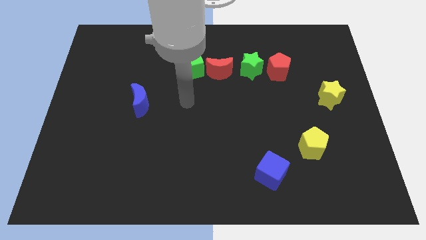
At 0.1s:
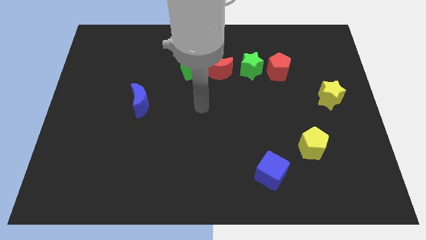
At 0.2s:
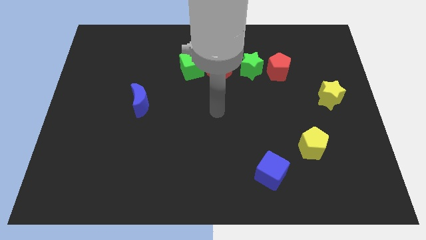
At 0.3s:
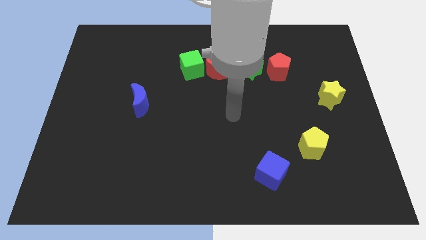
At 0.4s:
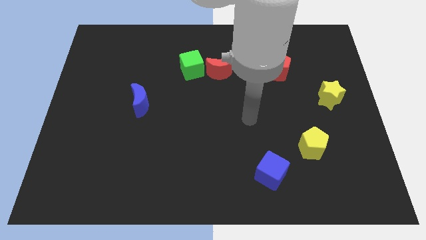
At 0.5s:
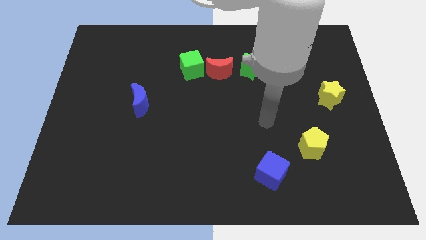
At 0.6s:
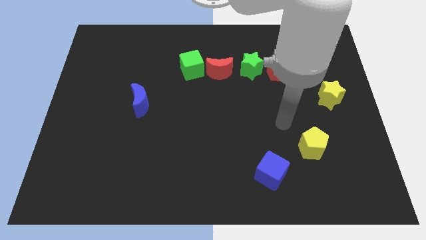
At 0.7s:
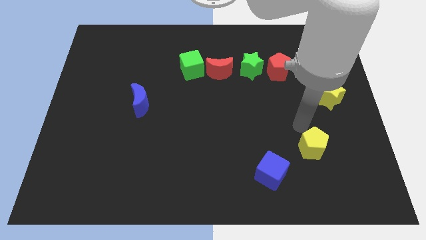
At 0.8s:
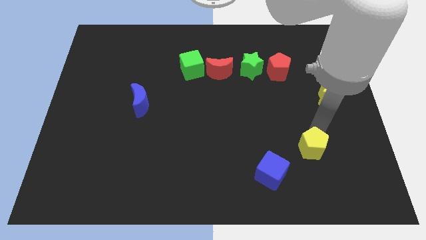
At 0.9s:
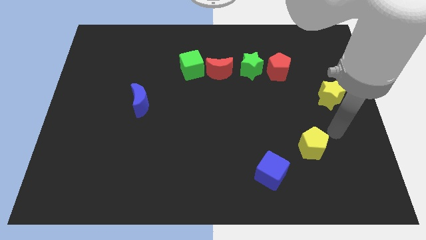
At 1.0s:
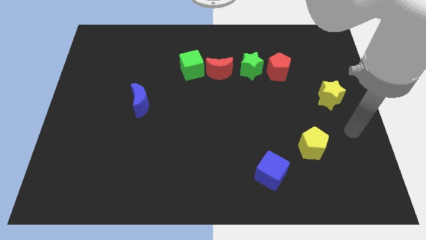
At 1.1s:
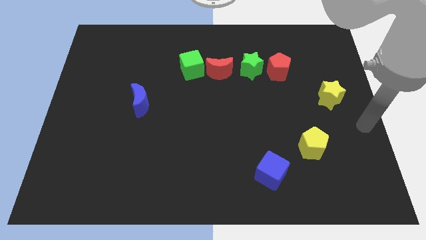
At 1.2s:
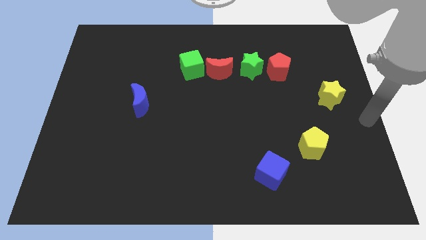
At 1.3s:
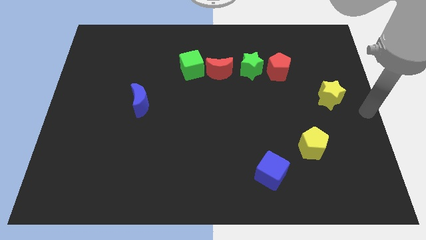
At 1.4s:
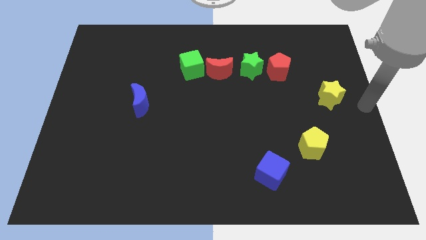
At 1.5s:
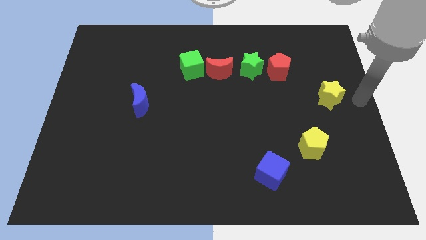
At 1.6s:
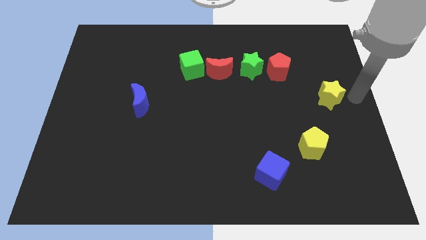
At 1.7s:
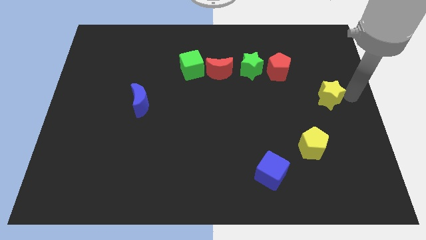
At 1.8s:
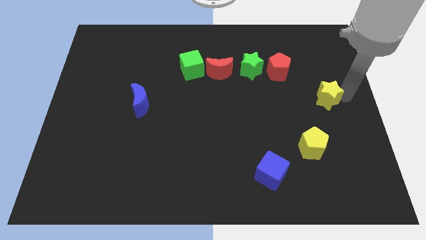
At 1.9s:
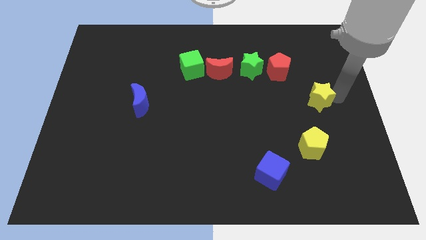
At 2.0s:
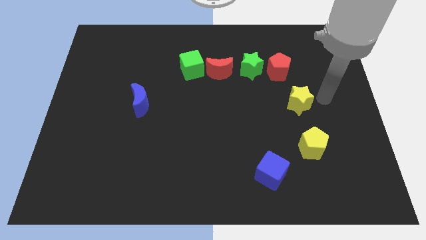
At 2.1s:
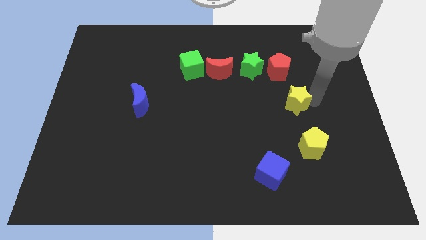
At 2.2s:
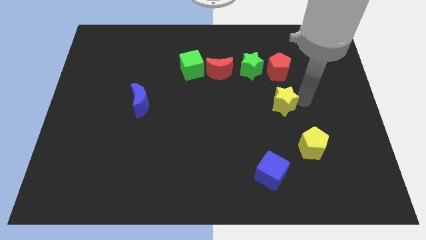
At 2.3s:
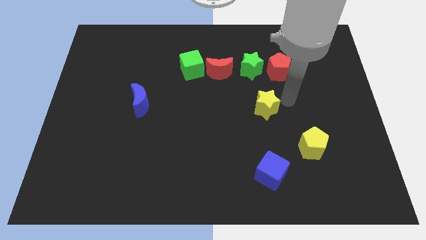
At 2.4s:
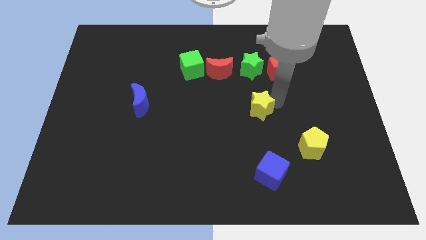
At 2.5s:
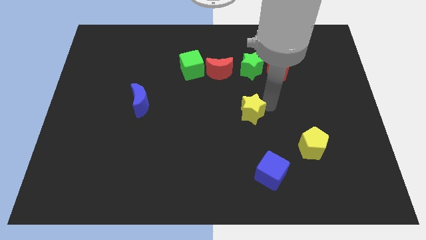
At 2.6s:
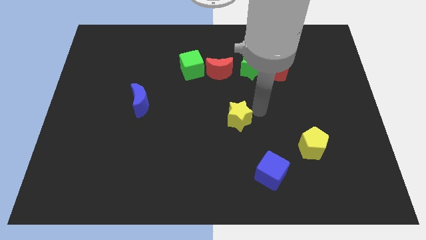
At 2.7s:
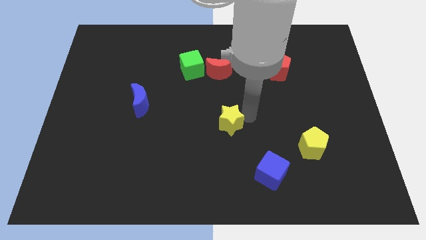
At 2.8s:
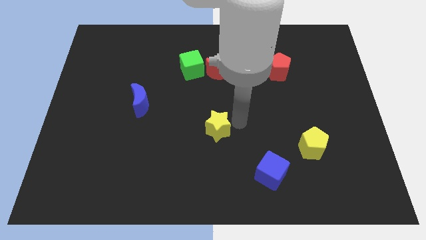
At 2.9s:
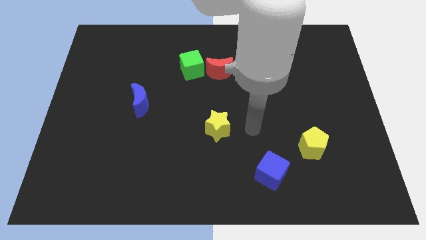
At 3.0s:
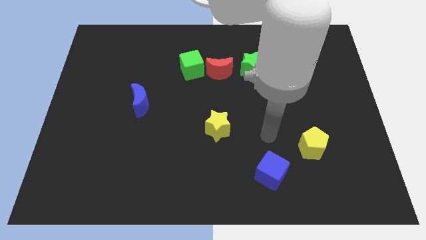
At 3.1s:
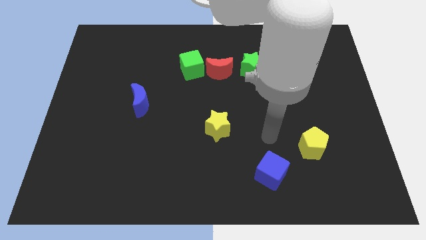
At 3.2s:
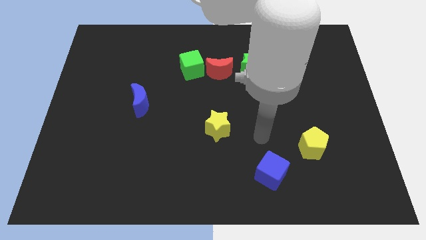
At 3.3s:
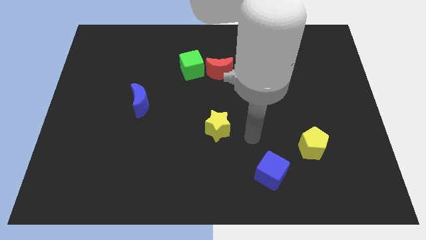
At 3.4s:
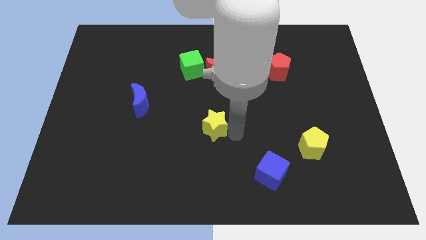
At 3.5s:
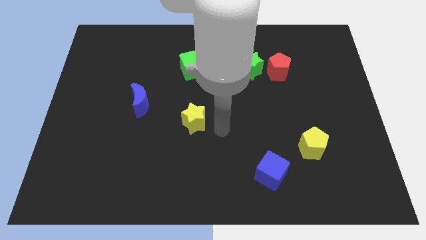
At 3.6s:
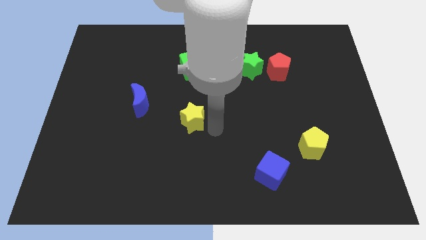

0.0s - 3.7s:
push the yellow star towards the blue moon

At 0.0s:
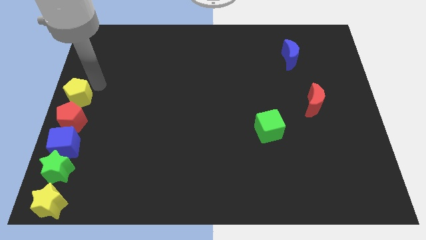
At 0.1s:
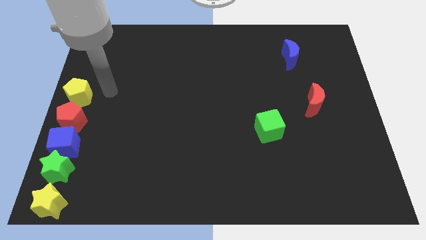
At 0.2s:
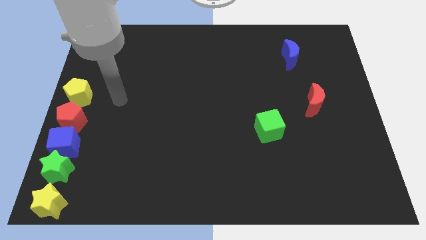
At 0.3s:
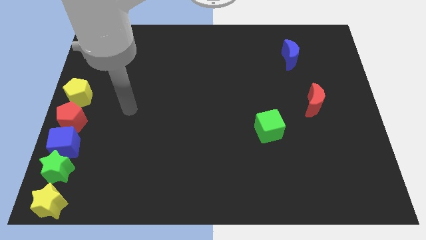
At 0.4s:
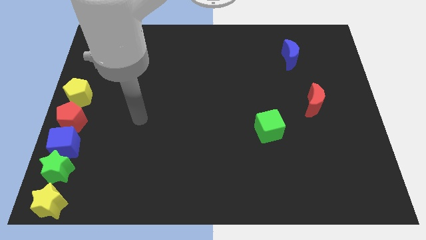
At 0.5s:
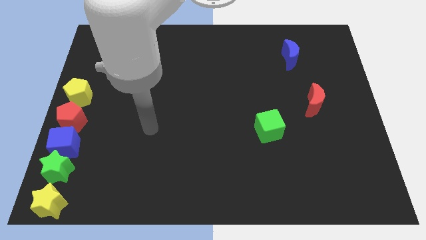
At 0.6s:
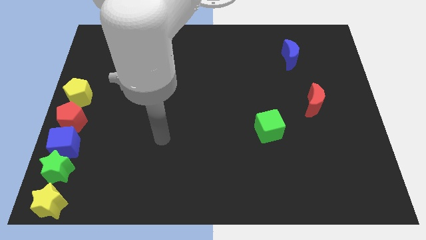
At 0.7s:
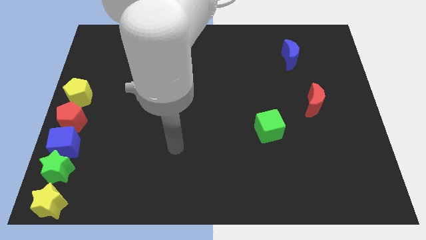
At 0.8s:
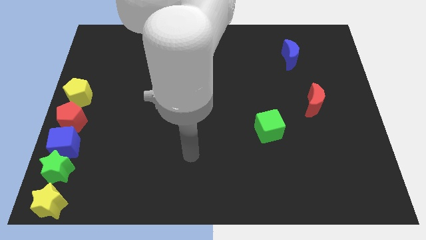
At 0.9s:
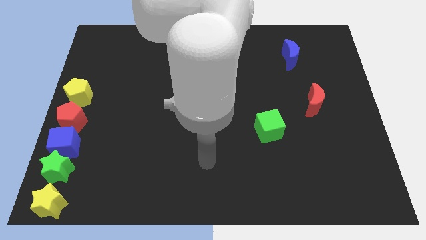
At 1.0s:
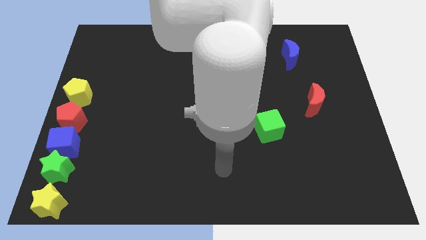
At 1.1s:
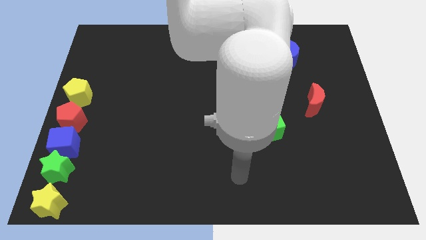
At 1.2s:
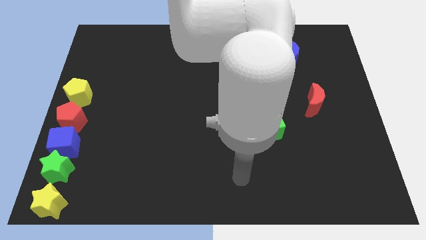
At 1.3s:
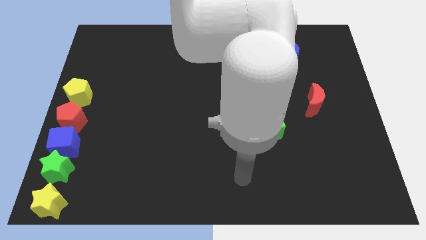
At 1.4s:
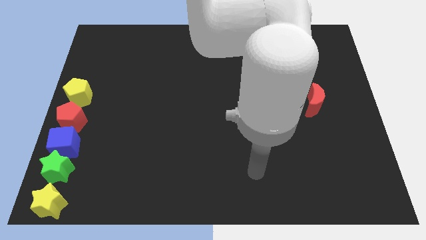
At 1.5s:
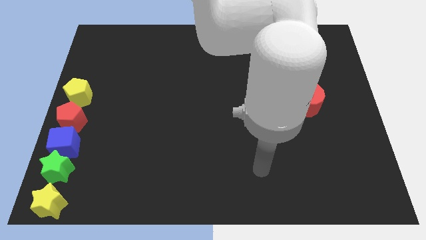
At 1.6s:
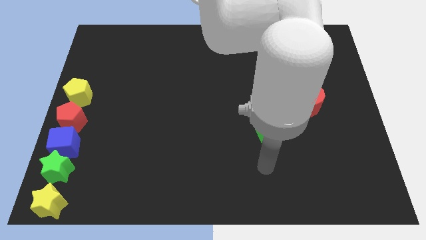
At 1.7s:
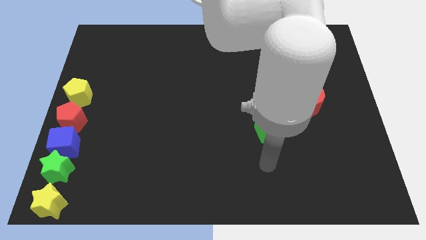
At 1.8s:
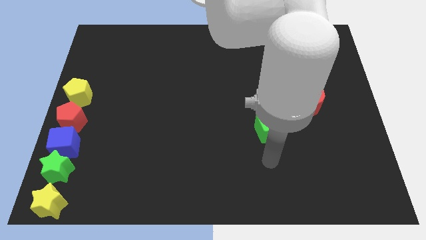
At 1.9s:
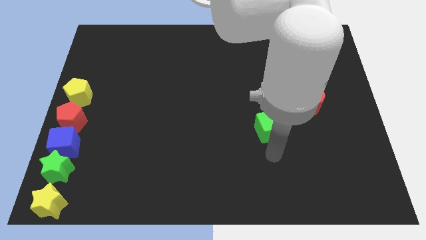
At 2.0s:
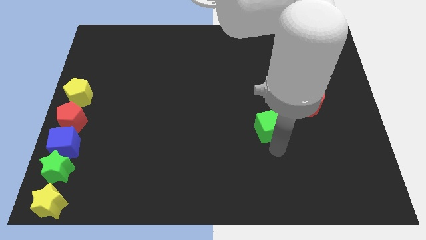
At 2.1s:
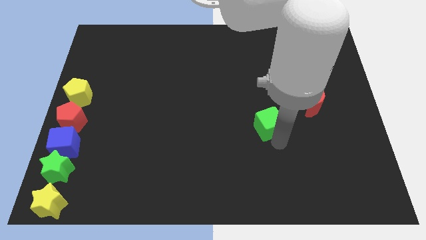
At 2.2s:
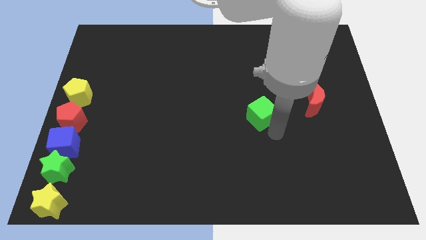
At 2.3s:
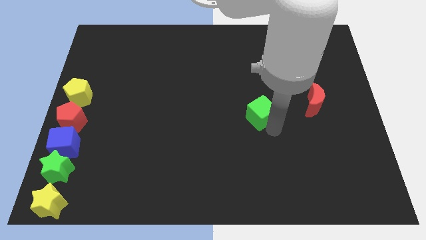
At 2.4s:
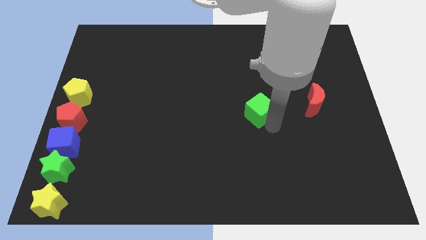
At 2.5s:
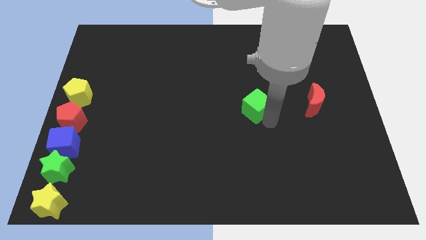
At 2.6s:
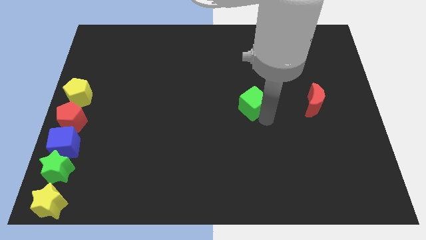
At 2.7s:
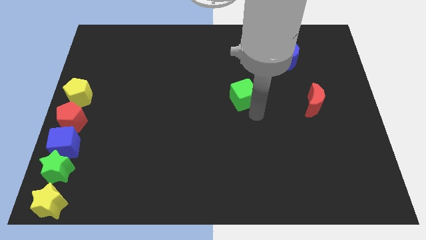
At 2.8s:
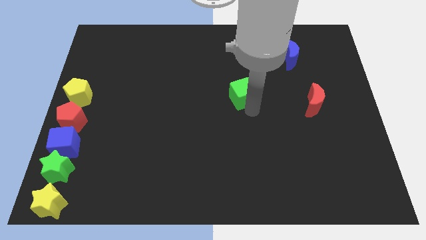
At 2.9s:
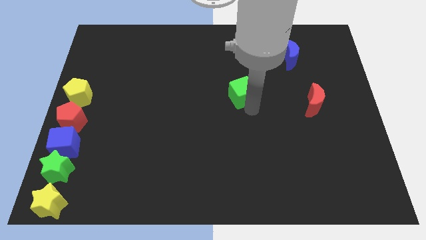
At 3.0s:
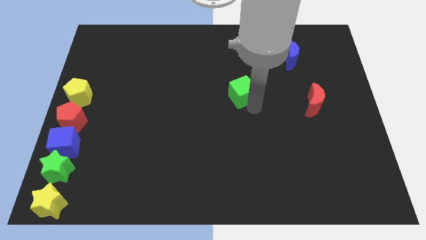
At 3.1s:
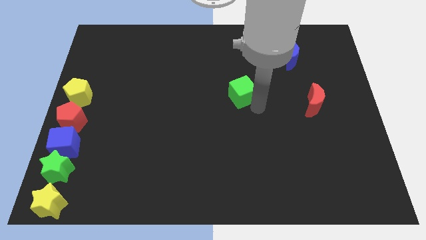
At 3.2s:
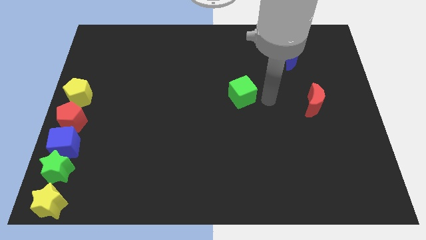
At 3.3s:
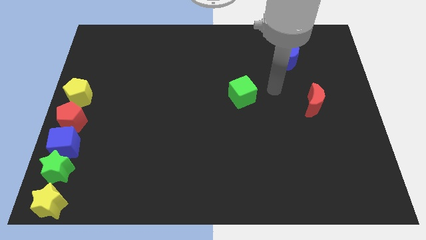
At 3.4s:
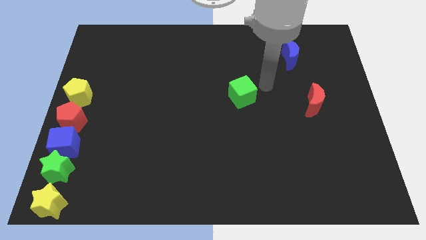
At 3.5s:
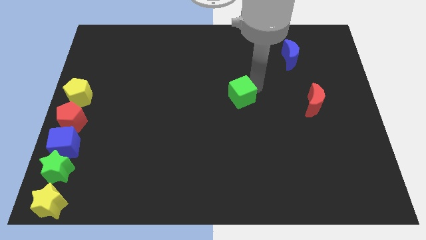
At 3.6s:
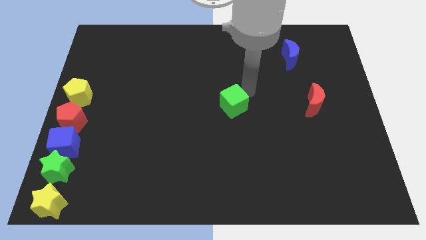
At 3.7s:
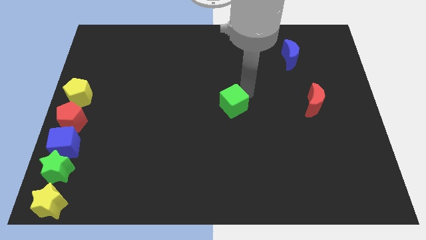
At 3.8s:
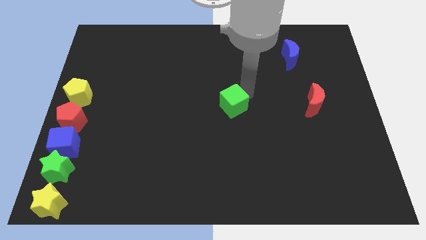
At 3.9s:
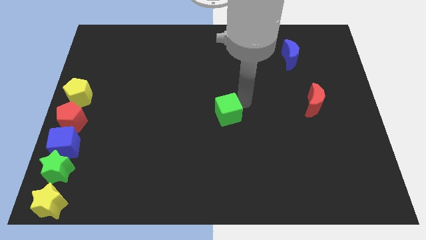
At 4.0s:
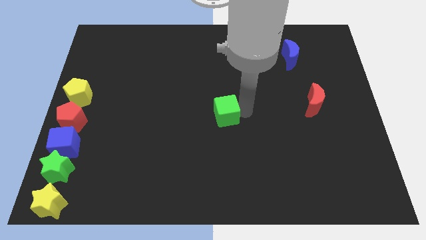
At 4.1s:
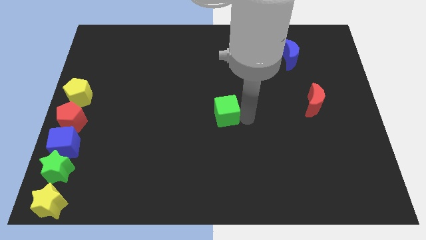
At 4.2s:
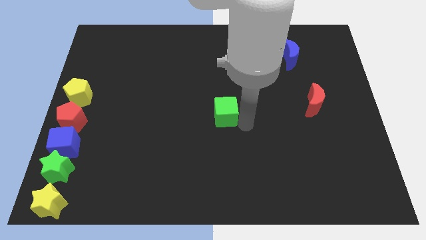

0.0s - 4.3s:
move the green cube to the center of the board

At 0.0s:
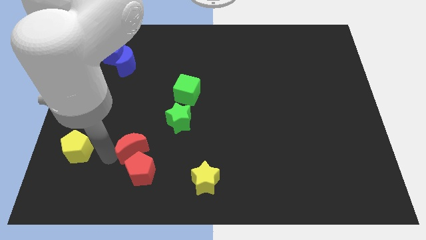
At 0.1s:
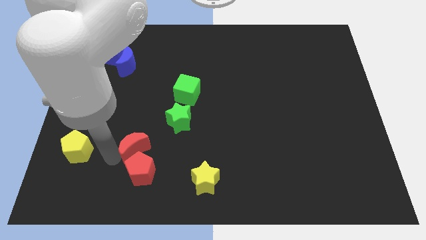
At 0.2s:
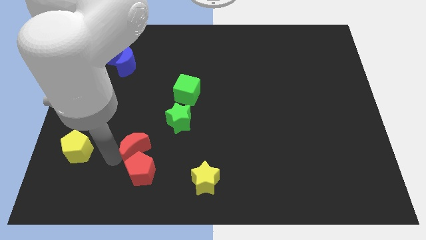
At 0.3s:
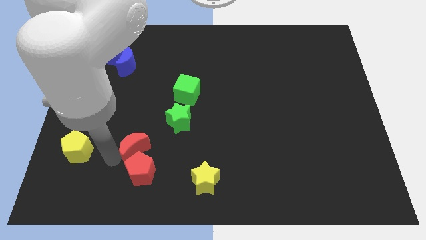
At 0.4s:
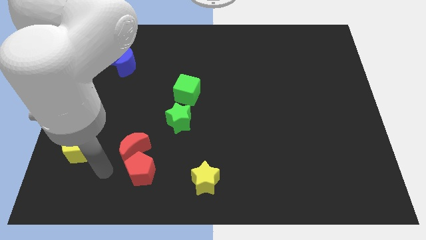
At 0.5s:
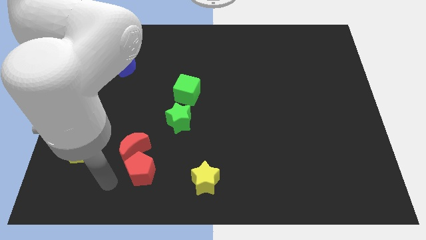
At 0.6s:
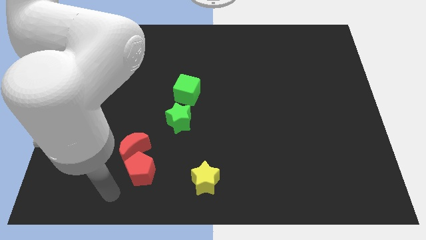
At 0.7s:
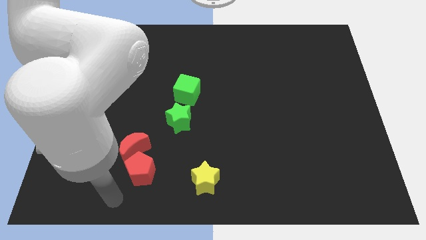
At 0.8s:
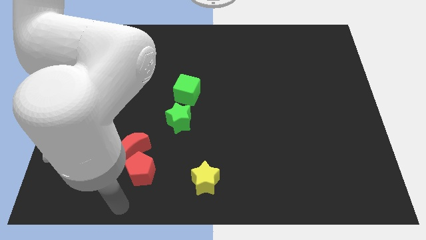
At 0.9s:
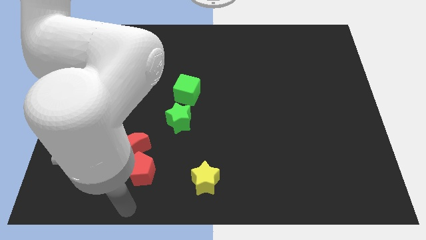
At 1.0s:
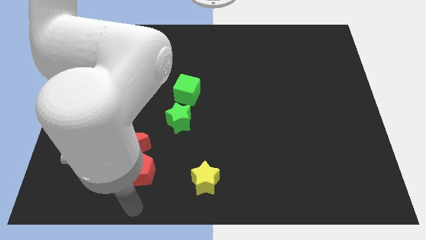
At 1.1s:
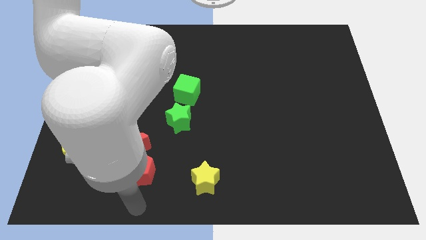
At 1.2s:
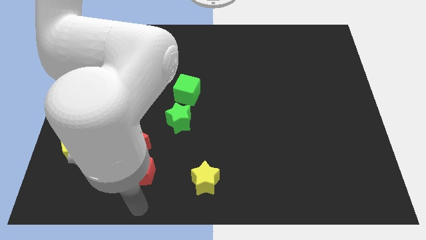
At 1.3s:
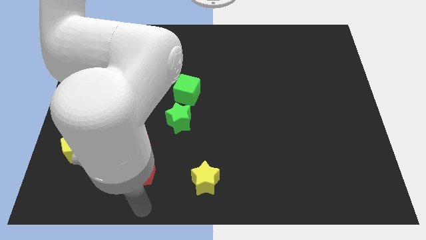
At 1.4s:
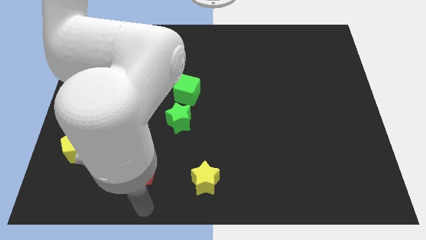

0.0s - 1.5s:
move your arm to the bottom of the red pentagon
